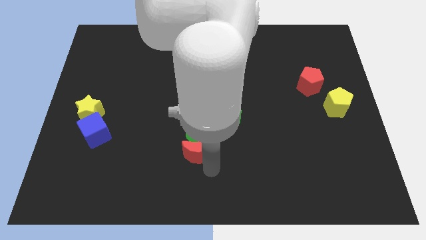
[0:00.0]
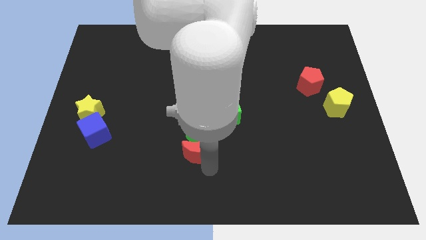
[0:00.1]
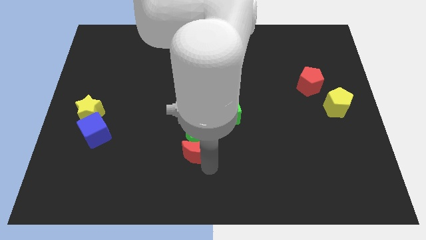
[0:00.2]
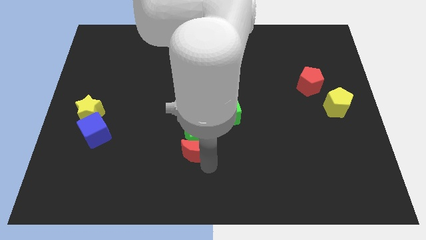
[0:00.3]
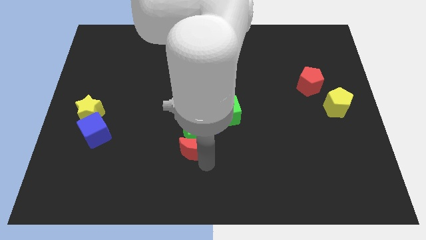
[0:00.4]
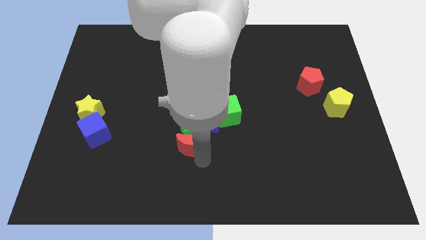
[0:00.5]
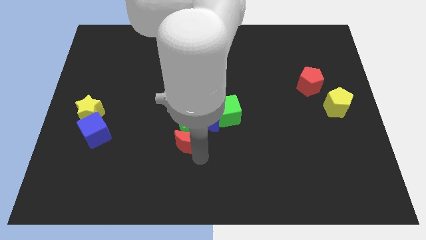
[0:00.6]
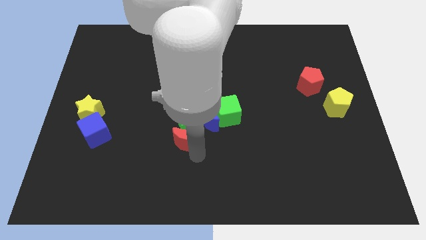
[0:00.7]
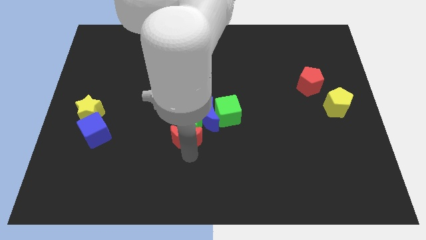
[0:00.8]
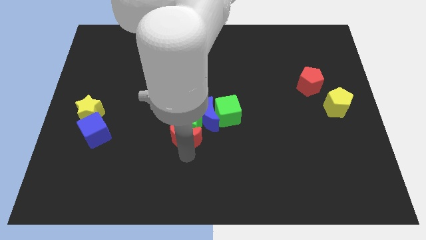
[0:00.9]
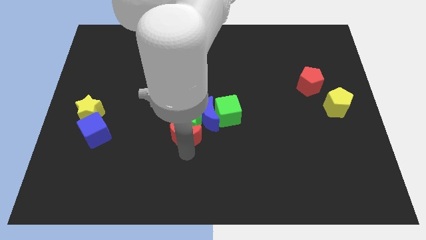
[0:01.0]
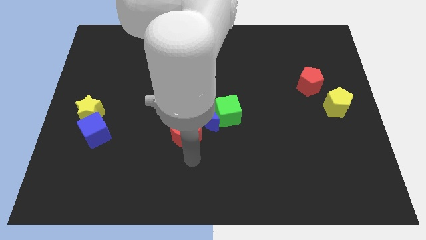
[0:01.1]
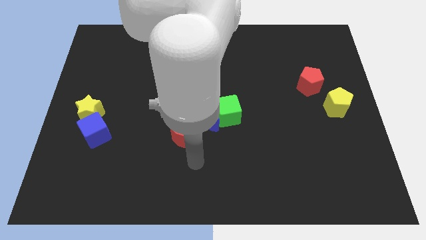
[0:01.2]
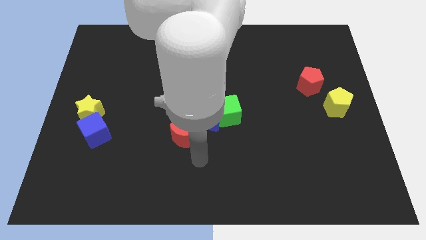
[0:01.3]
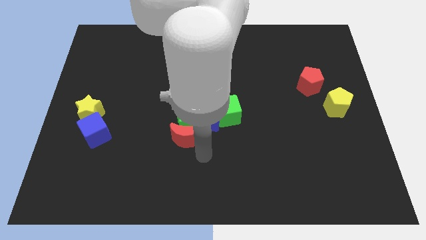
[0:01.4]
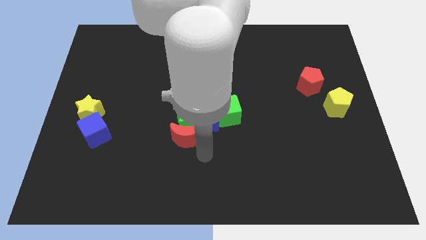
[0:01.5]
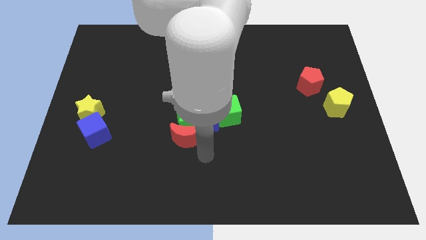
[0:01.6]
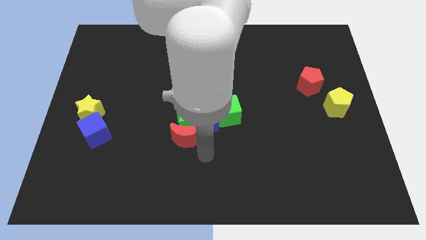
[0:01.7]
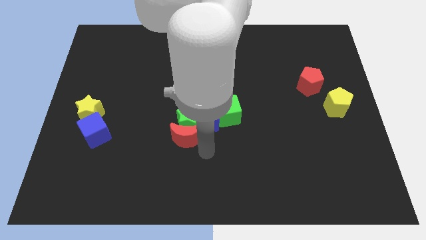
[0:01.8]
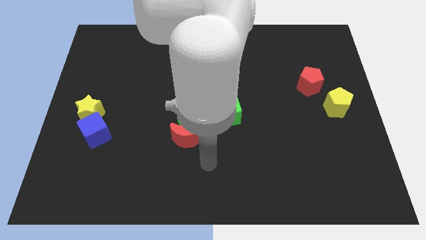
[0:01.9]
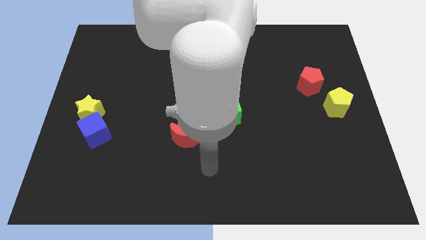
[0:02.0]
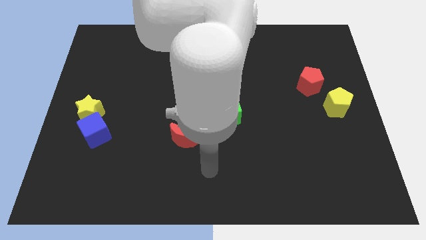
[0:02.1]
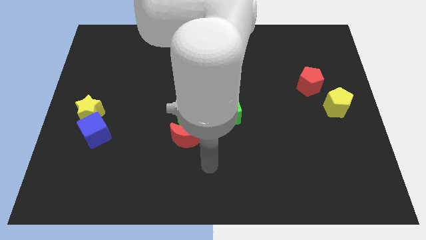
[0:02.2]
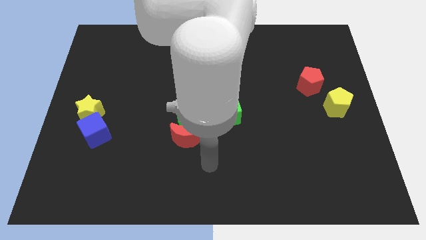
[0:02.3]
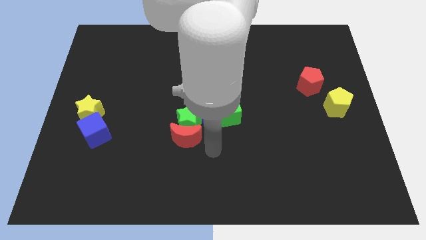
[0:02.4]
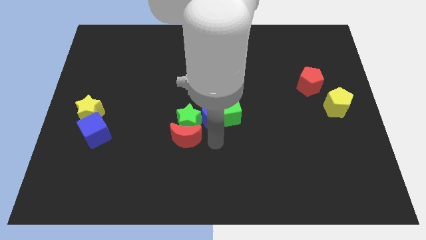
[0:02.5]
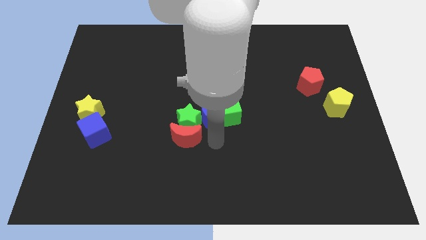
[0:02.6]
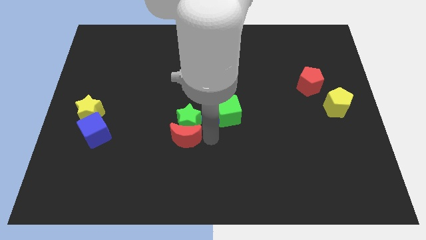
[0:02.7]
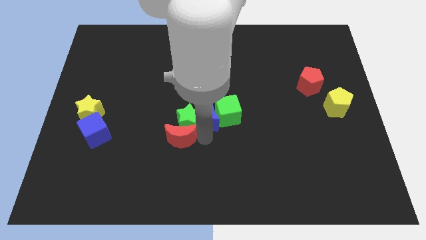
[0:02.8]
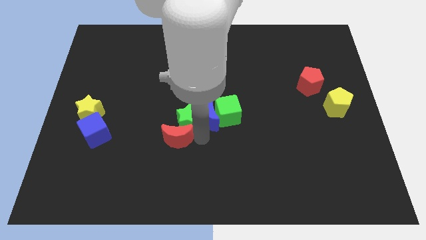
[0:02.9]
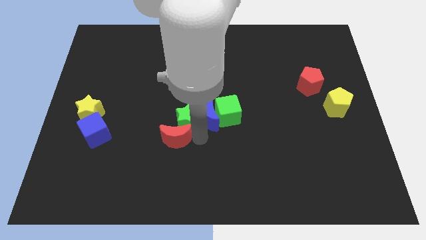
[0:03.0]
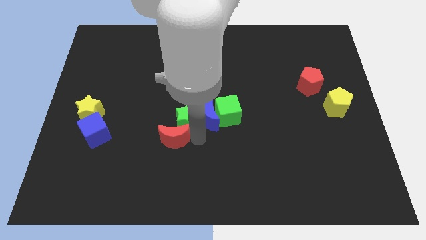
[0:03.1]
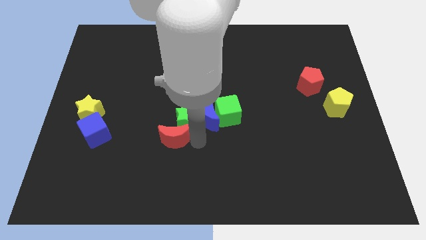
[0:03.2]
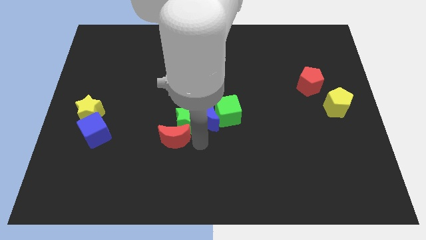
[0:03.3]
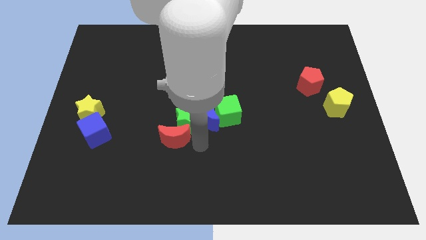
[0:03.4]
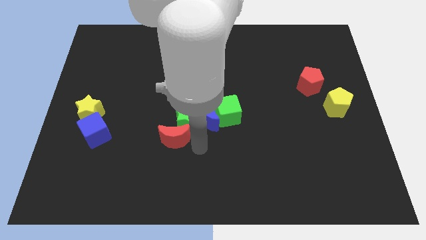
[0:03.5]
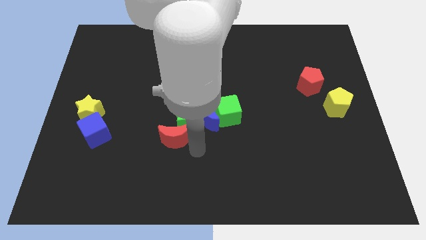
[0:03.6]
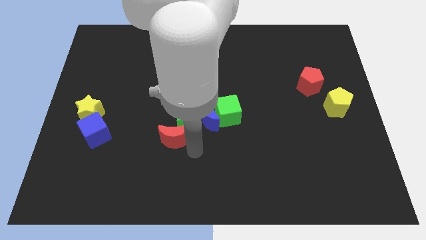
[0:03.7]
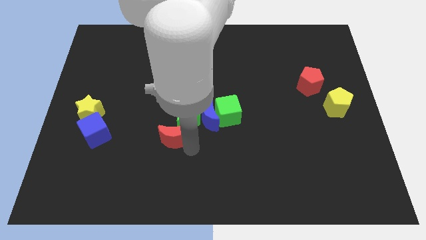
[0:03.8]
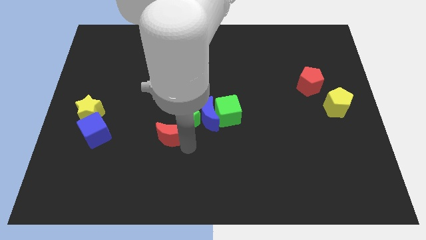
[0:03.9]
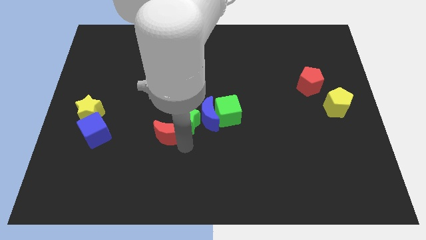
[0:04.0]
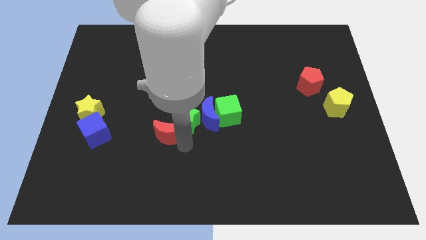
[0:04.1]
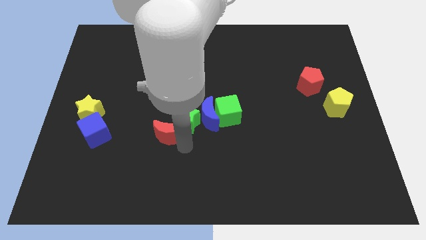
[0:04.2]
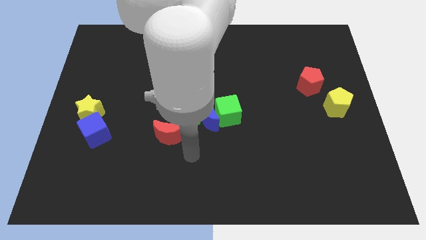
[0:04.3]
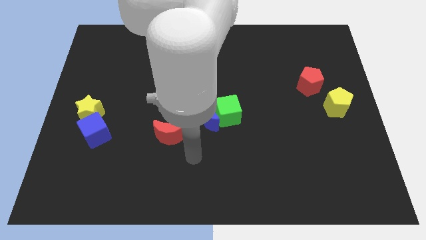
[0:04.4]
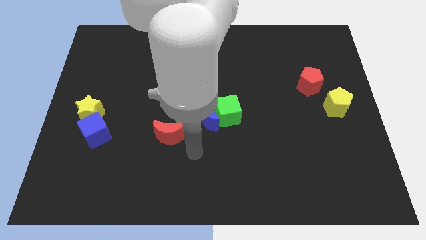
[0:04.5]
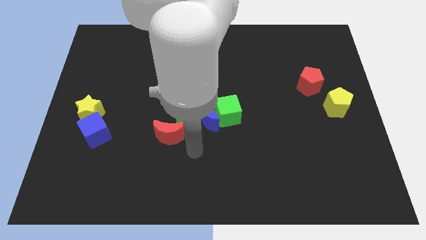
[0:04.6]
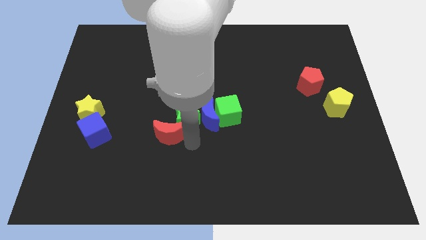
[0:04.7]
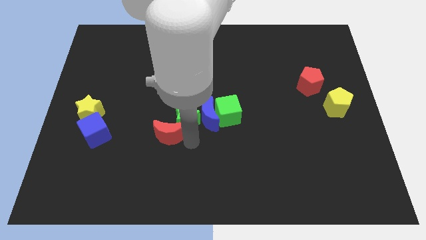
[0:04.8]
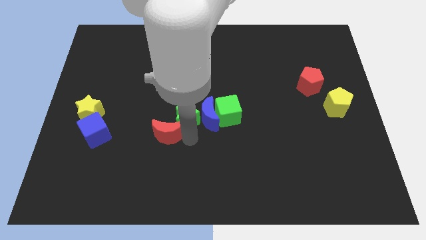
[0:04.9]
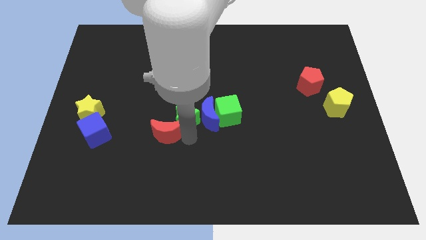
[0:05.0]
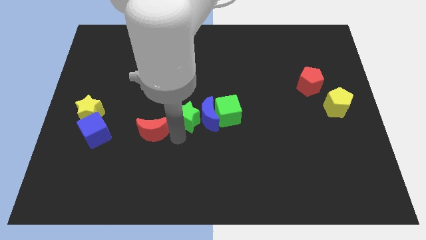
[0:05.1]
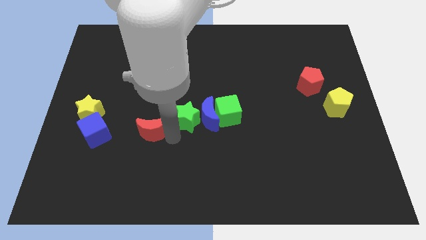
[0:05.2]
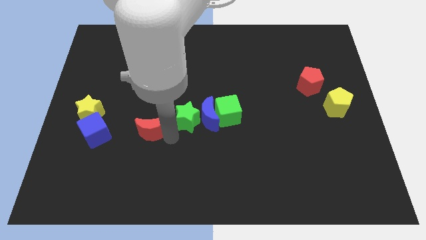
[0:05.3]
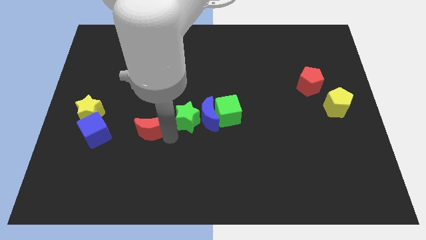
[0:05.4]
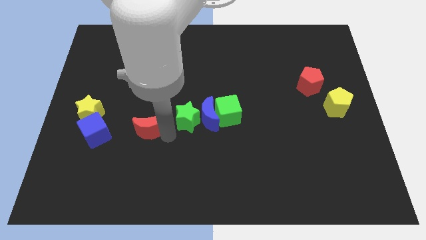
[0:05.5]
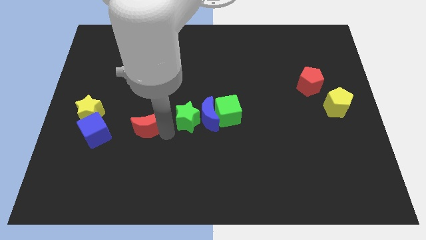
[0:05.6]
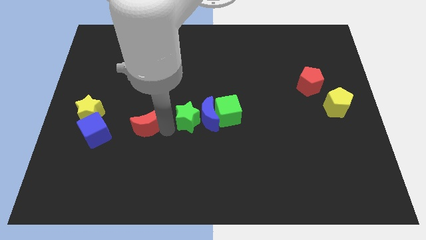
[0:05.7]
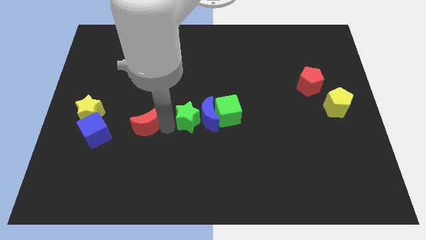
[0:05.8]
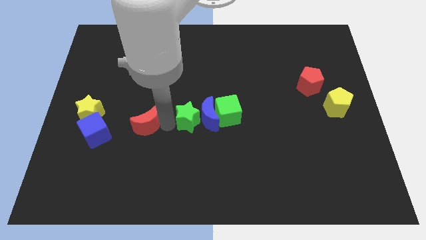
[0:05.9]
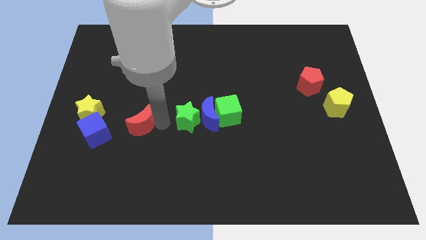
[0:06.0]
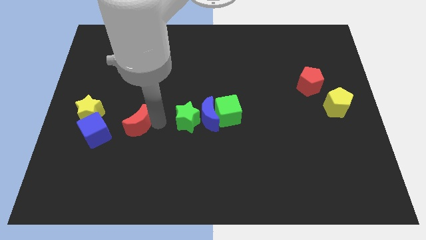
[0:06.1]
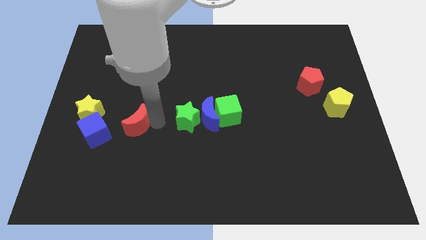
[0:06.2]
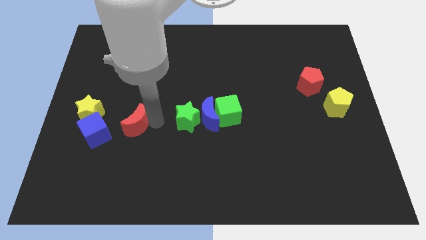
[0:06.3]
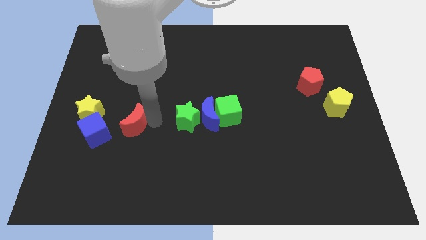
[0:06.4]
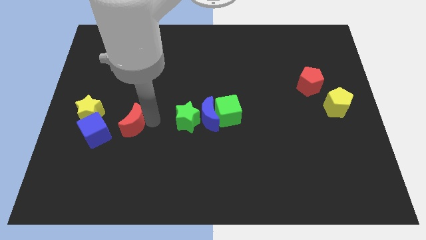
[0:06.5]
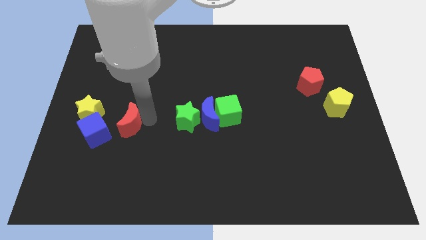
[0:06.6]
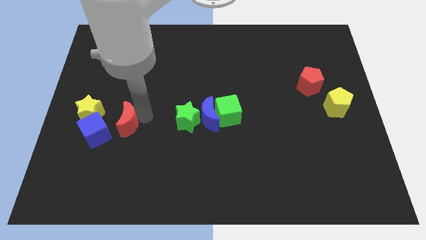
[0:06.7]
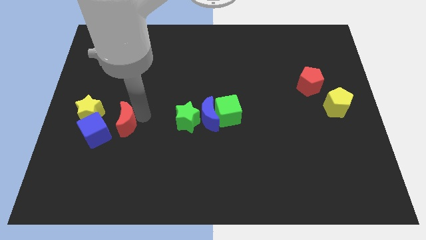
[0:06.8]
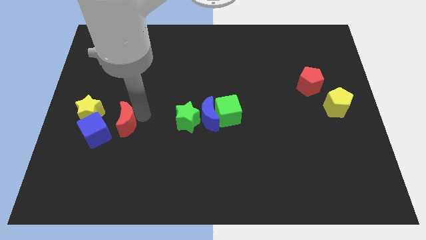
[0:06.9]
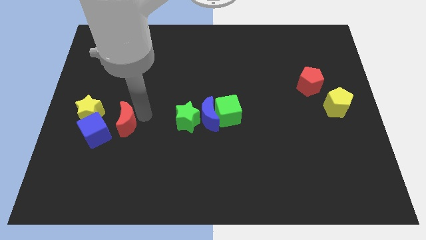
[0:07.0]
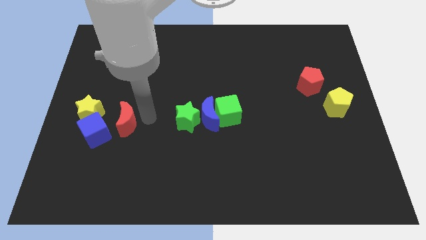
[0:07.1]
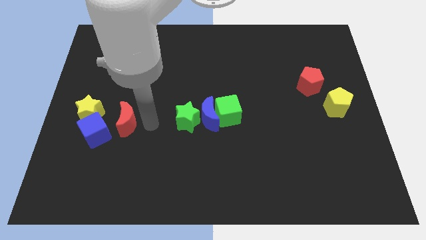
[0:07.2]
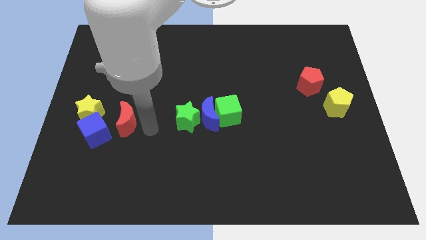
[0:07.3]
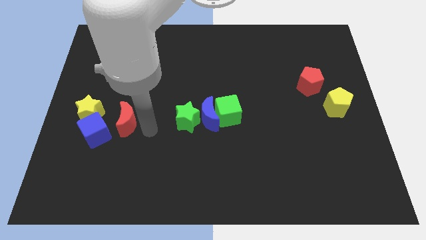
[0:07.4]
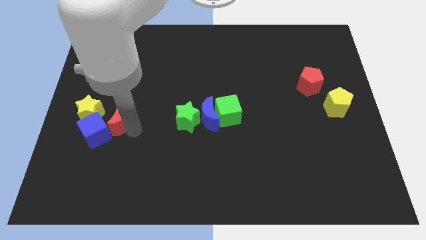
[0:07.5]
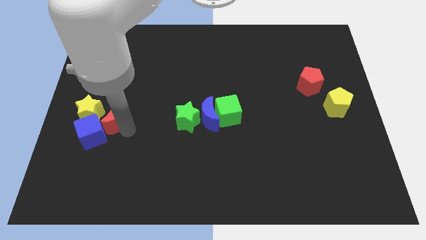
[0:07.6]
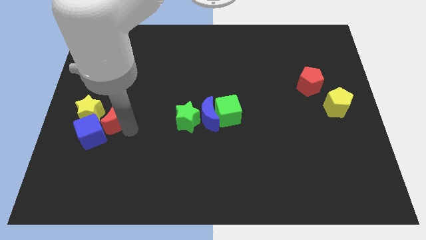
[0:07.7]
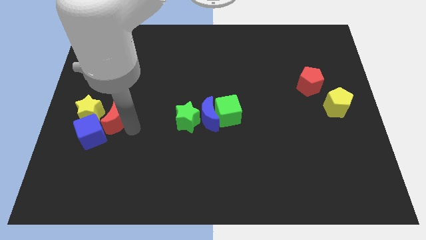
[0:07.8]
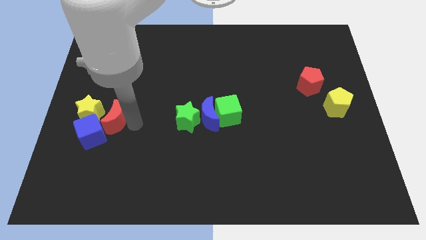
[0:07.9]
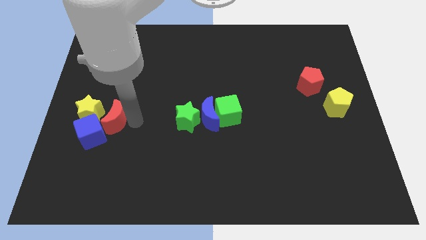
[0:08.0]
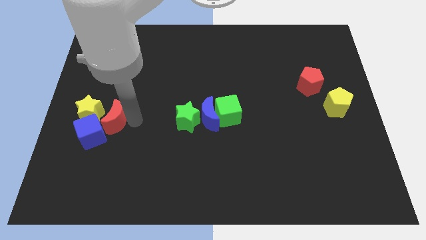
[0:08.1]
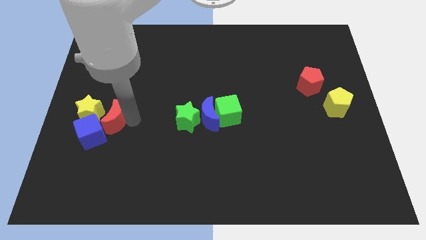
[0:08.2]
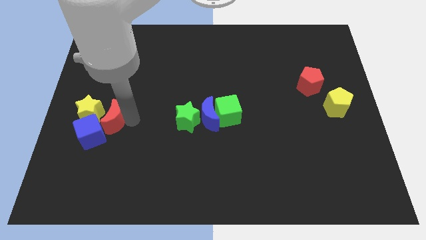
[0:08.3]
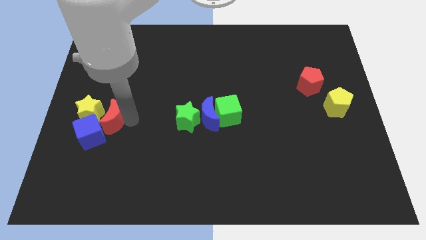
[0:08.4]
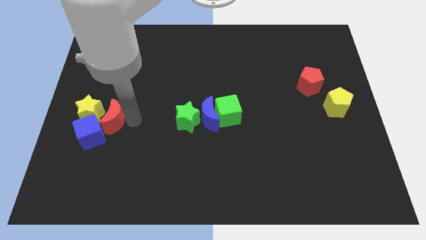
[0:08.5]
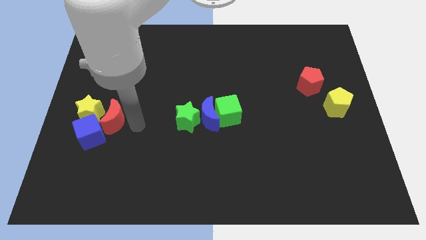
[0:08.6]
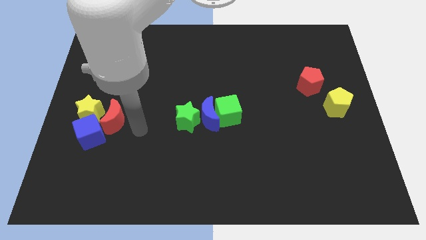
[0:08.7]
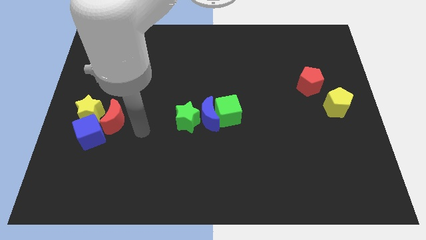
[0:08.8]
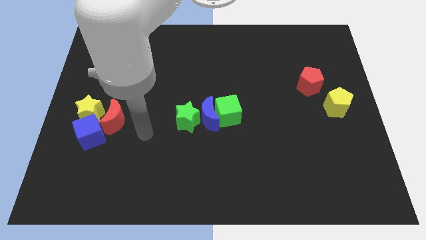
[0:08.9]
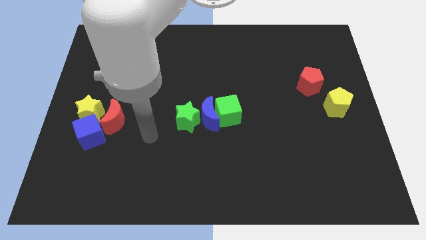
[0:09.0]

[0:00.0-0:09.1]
place the red crescent into the yellow star
